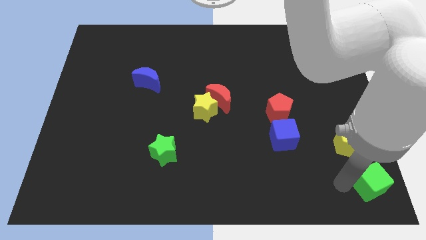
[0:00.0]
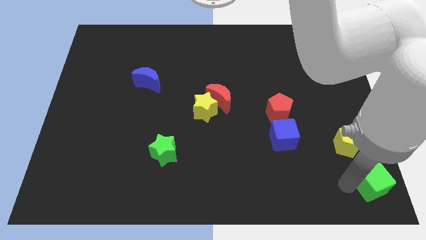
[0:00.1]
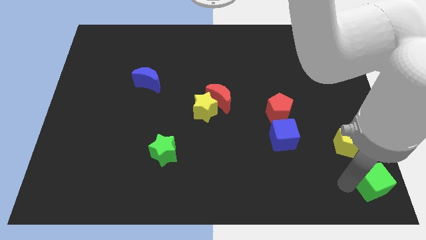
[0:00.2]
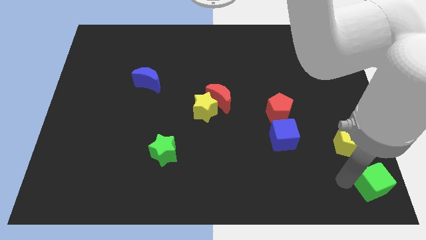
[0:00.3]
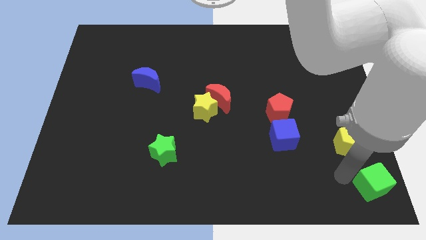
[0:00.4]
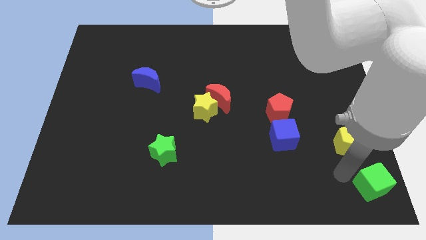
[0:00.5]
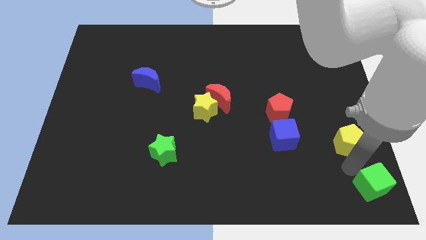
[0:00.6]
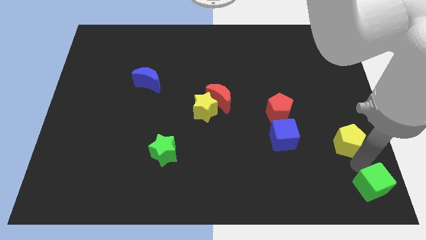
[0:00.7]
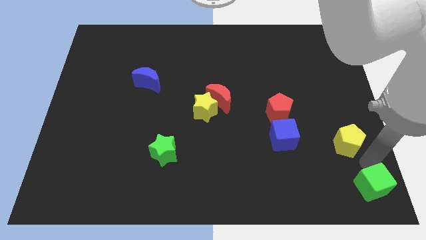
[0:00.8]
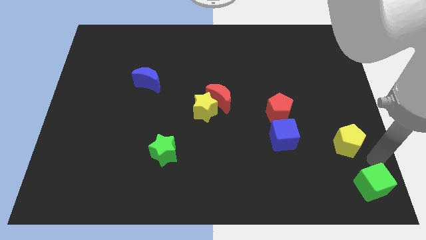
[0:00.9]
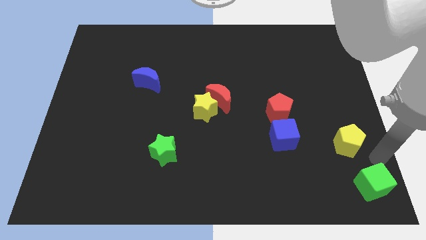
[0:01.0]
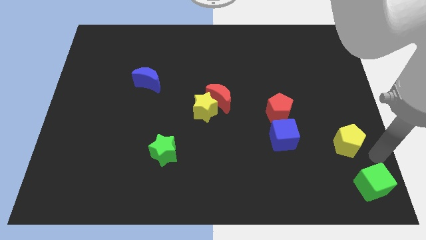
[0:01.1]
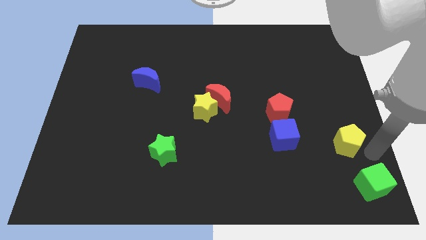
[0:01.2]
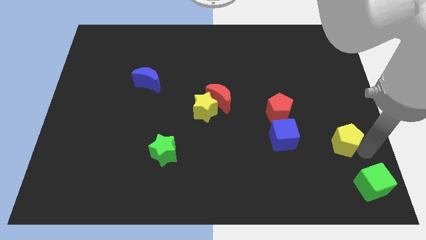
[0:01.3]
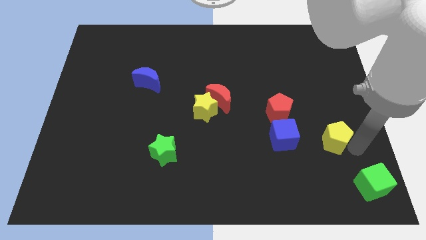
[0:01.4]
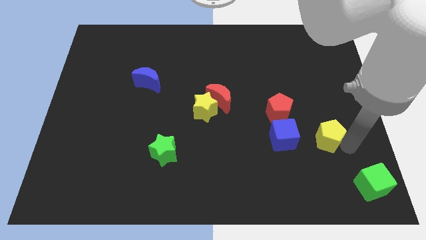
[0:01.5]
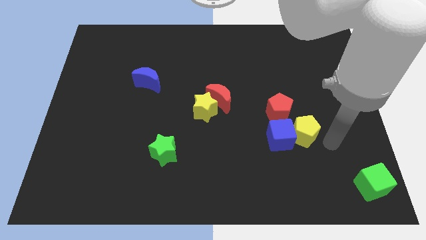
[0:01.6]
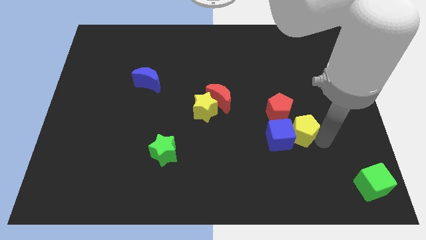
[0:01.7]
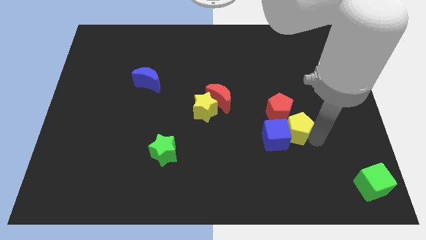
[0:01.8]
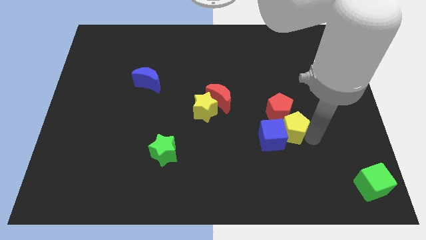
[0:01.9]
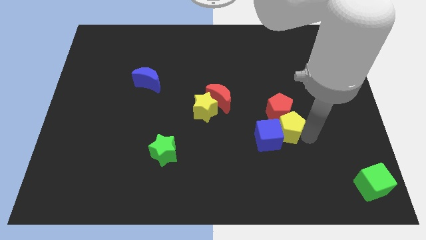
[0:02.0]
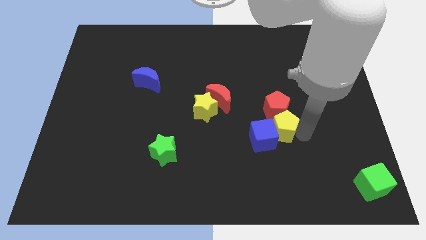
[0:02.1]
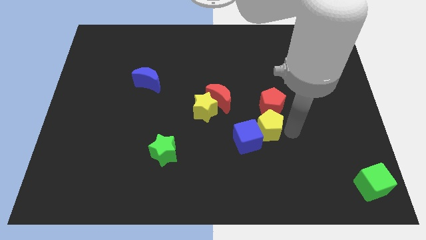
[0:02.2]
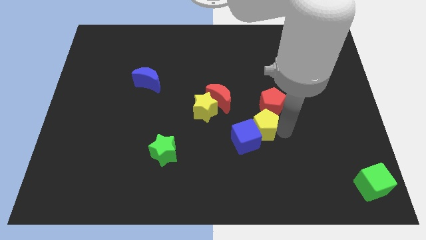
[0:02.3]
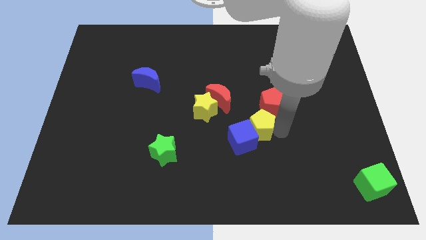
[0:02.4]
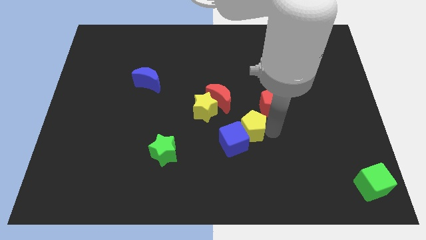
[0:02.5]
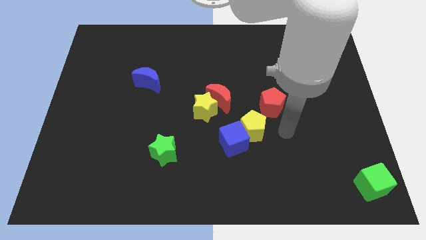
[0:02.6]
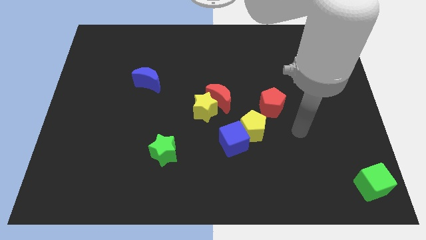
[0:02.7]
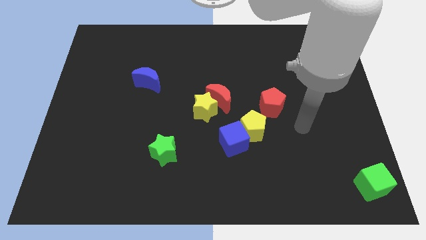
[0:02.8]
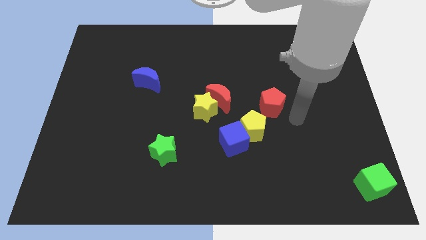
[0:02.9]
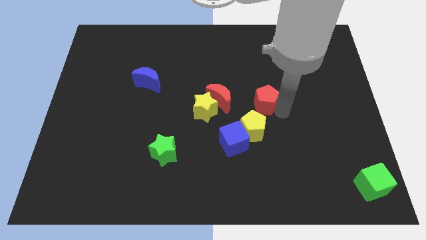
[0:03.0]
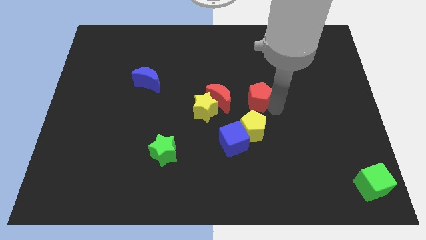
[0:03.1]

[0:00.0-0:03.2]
put the yellow pentagon in between the red pentagon and the blue cube

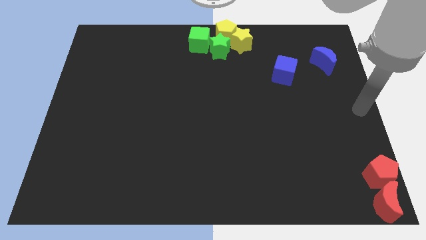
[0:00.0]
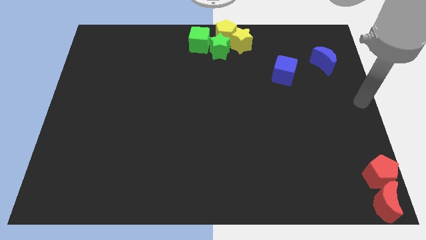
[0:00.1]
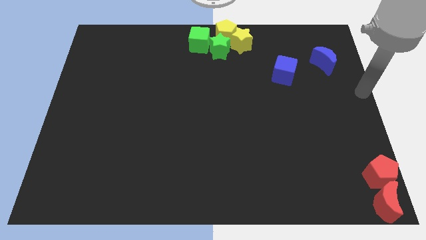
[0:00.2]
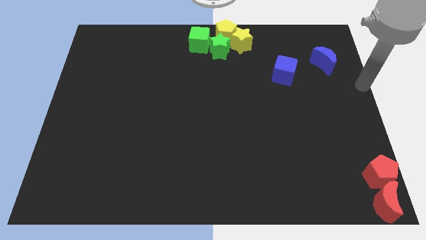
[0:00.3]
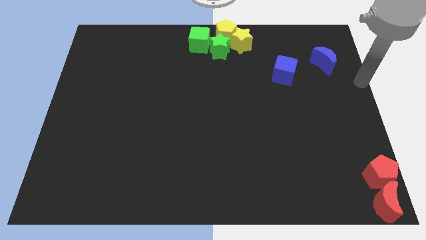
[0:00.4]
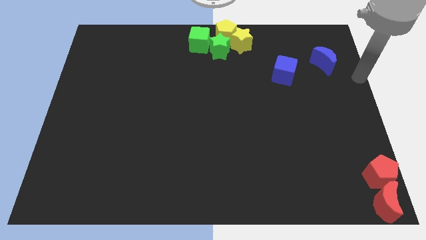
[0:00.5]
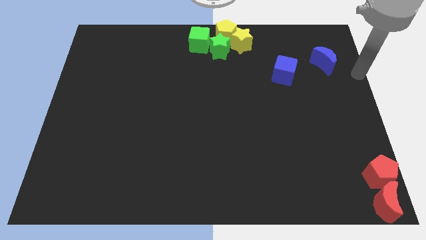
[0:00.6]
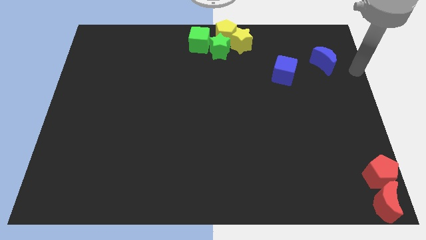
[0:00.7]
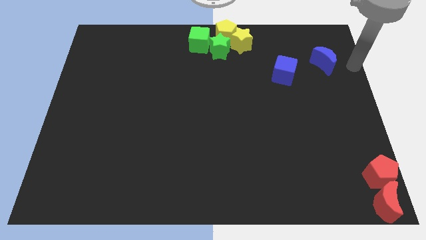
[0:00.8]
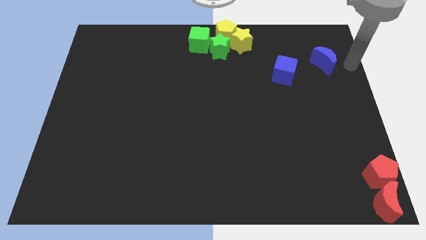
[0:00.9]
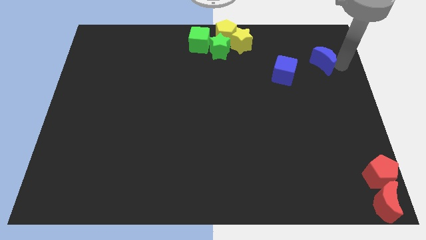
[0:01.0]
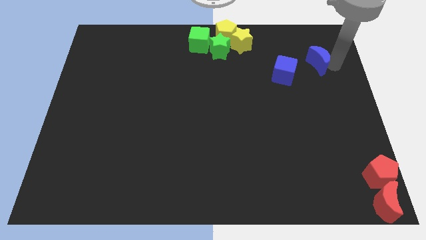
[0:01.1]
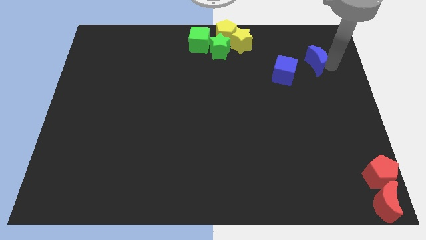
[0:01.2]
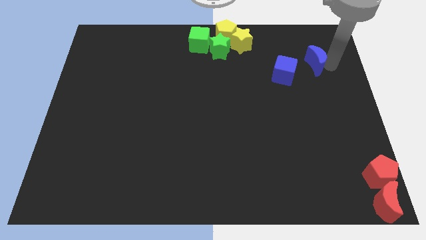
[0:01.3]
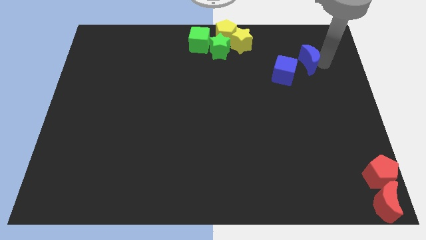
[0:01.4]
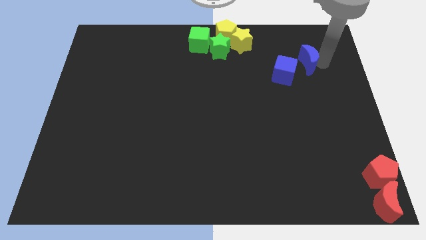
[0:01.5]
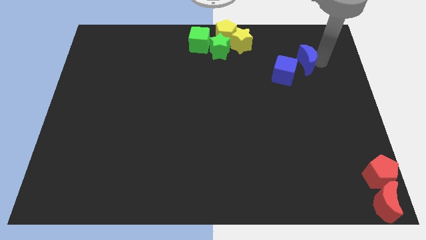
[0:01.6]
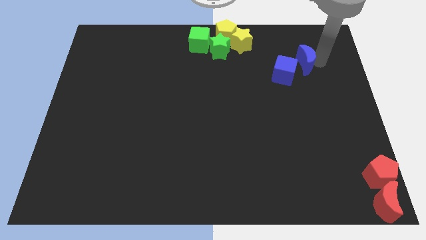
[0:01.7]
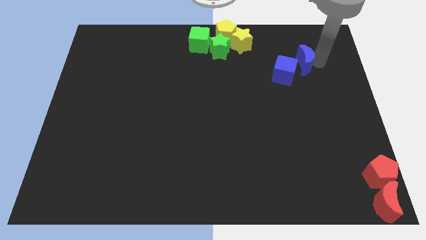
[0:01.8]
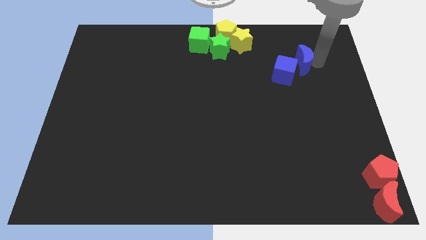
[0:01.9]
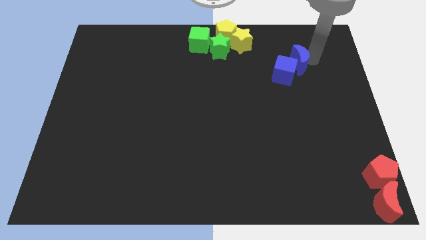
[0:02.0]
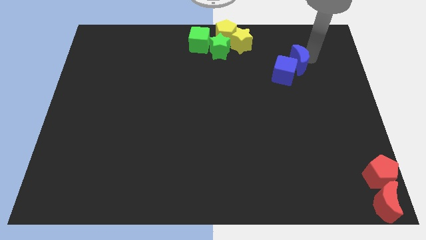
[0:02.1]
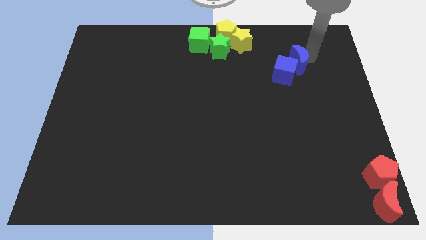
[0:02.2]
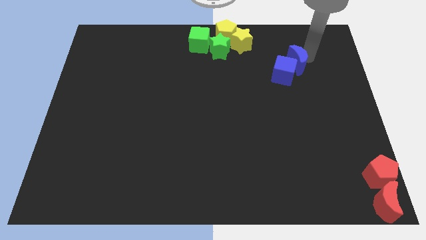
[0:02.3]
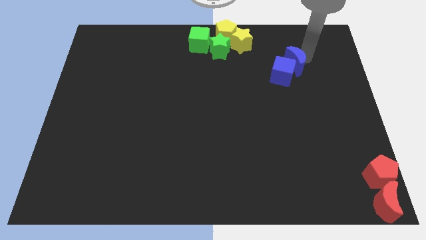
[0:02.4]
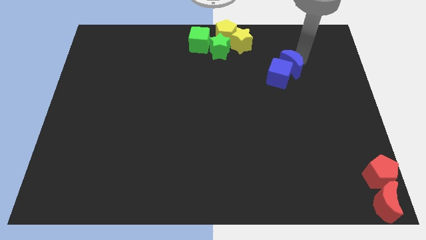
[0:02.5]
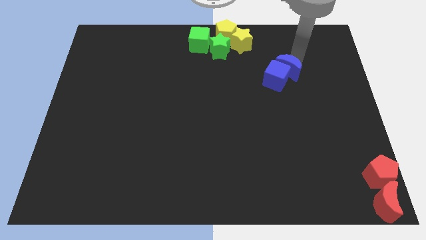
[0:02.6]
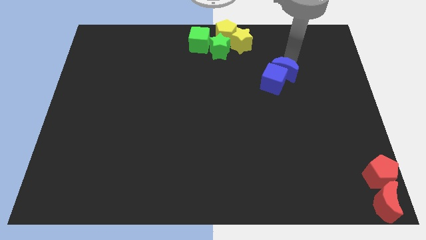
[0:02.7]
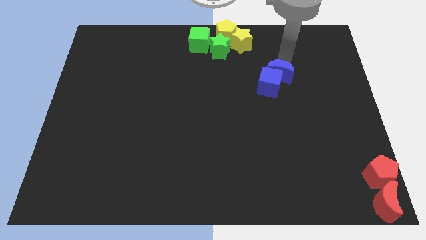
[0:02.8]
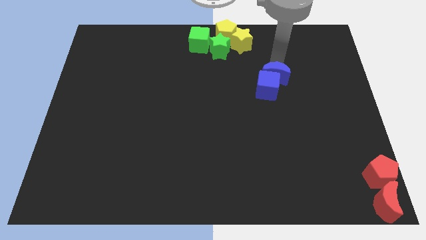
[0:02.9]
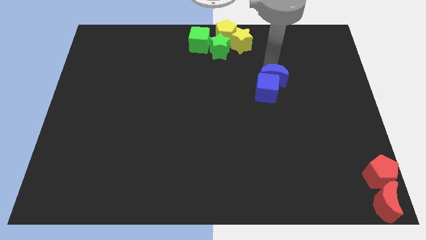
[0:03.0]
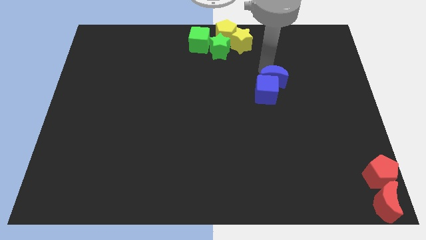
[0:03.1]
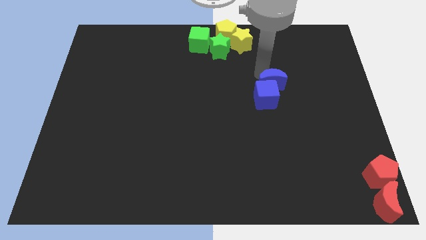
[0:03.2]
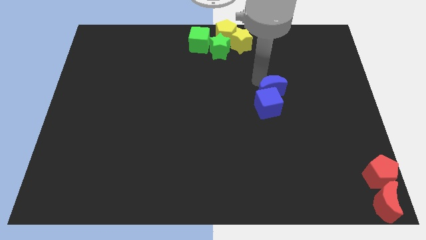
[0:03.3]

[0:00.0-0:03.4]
move the blue blocks diagonal to the bottom right of the green star

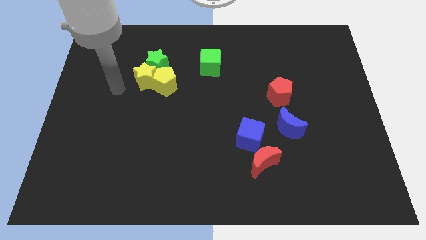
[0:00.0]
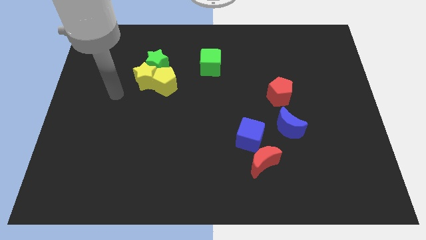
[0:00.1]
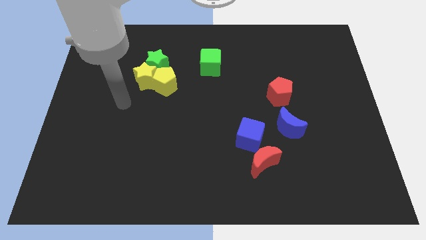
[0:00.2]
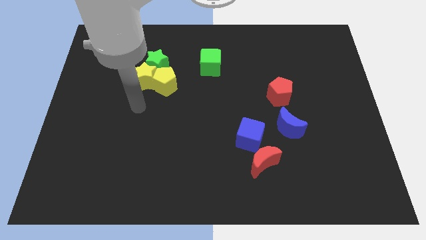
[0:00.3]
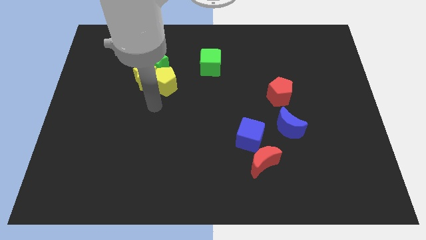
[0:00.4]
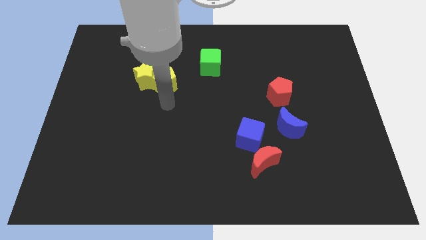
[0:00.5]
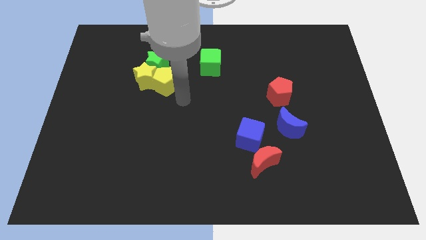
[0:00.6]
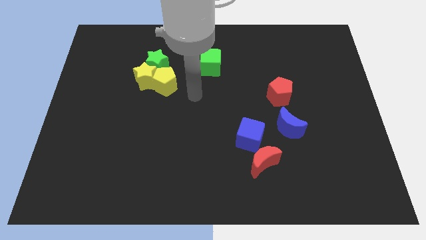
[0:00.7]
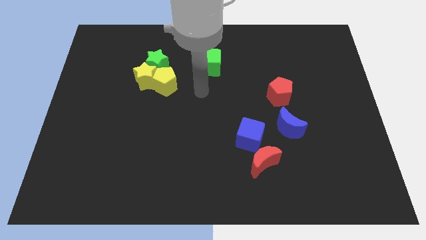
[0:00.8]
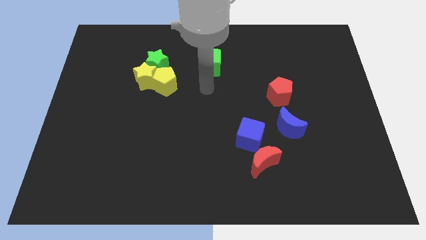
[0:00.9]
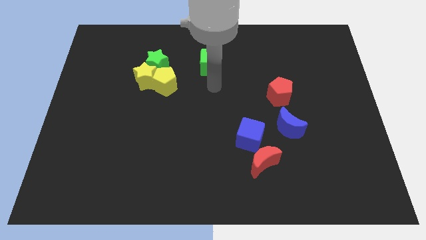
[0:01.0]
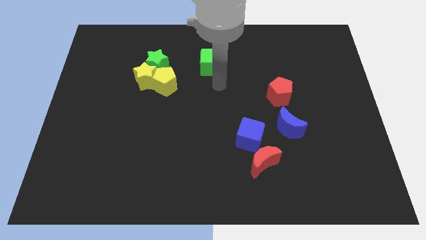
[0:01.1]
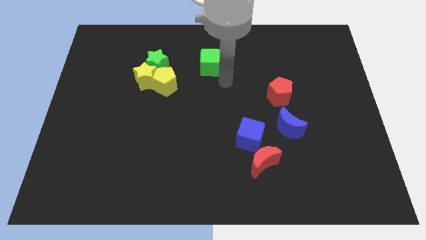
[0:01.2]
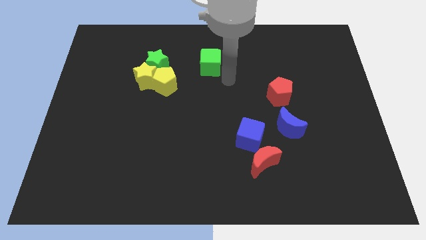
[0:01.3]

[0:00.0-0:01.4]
go near to the green cube

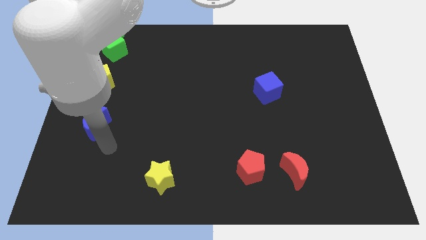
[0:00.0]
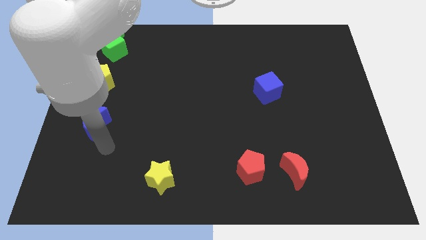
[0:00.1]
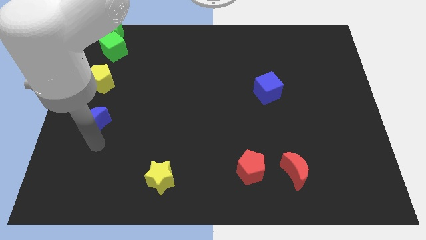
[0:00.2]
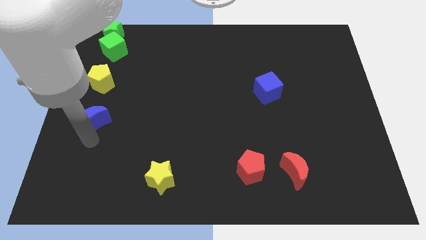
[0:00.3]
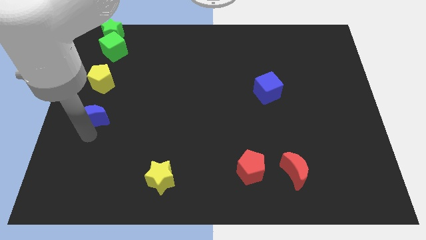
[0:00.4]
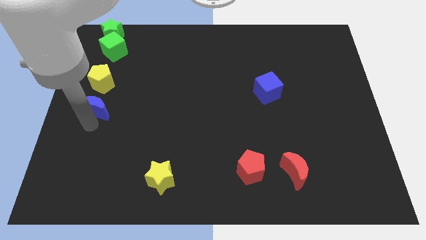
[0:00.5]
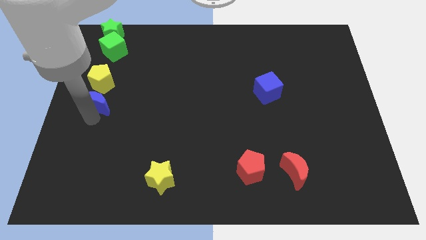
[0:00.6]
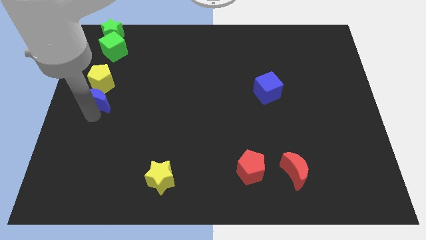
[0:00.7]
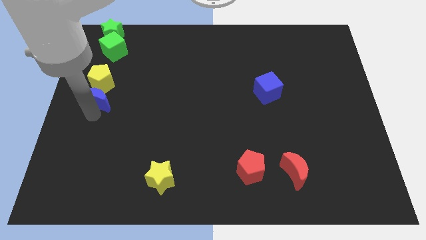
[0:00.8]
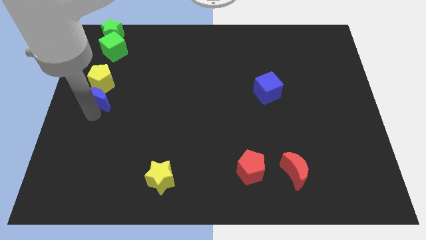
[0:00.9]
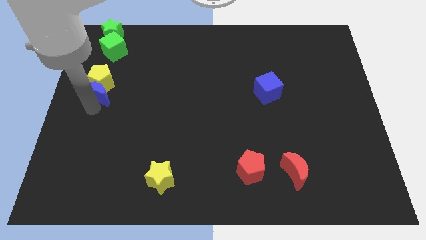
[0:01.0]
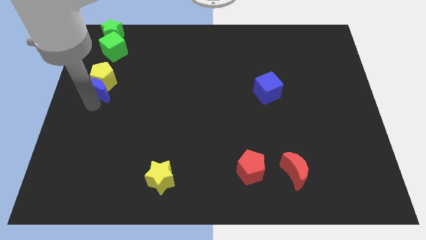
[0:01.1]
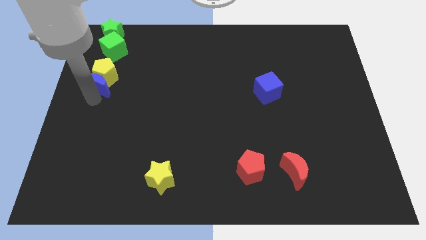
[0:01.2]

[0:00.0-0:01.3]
push blue crescent in to yellow pentagon
